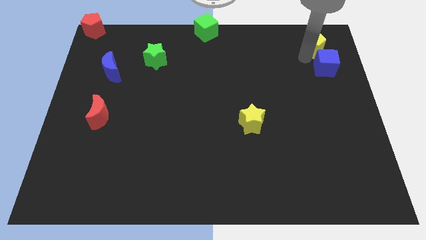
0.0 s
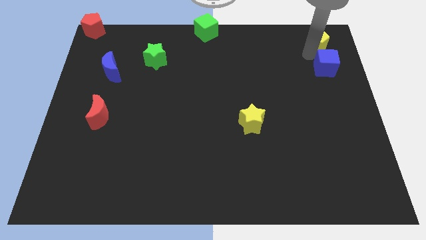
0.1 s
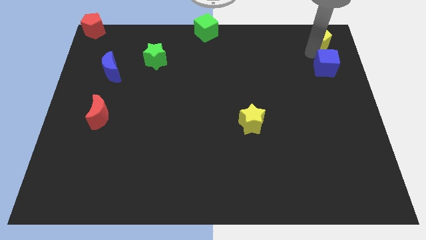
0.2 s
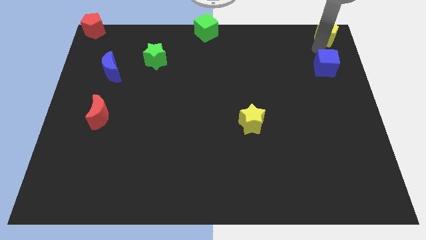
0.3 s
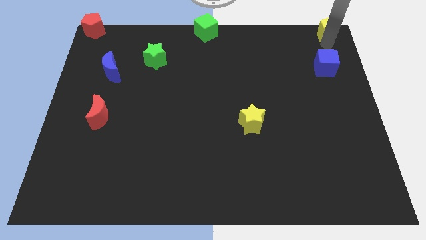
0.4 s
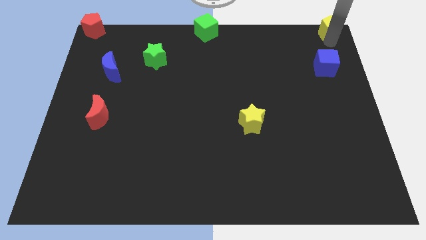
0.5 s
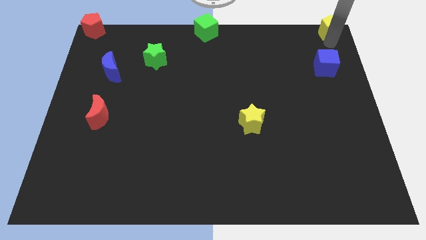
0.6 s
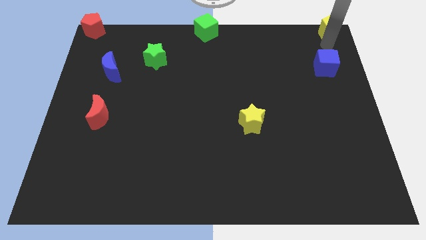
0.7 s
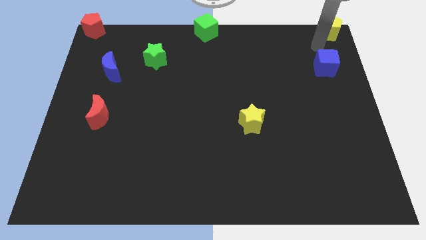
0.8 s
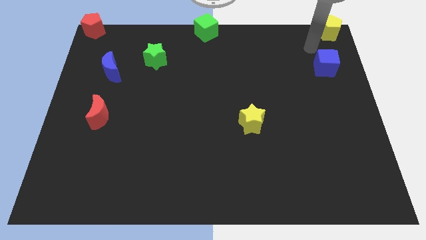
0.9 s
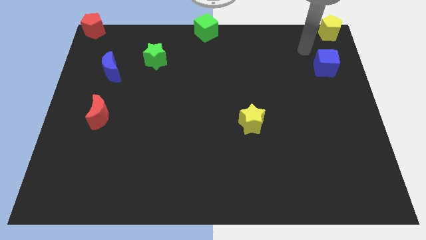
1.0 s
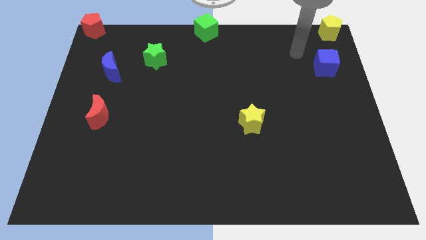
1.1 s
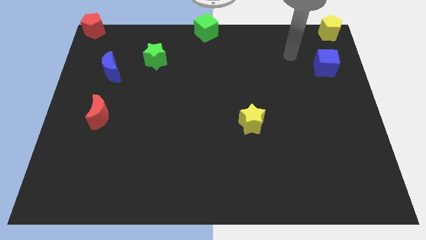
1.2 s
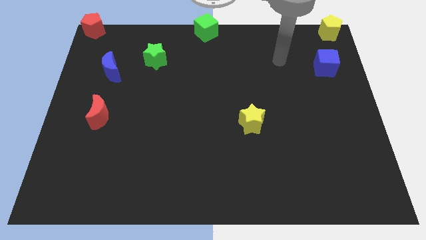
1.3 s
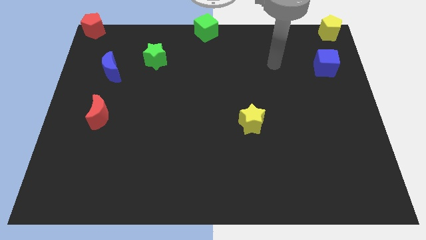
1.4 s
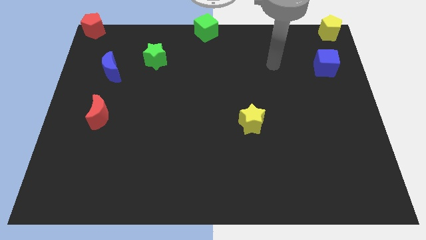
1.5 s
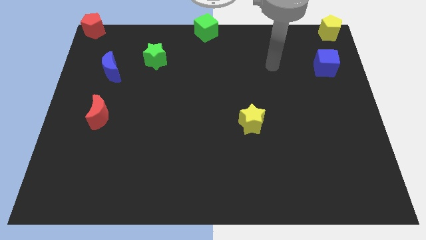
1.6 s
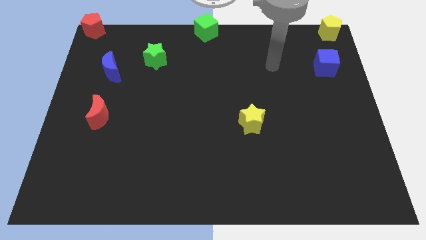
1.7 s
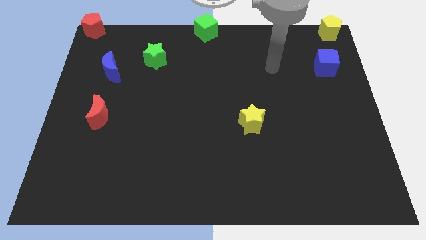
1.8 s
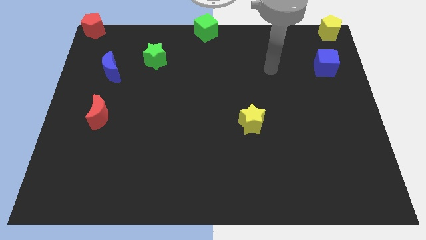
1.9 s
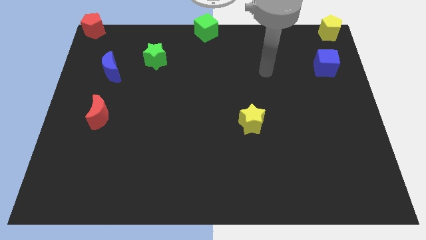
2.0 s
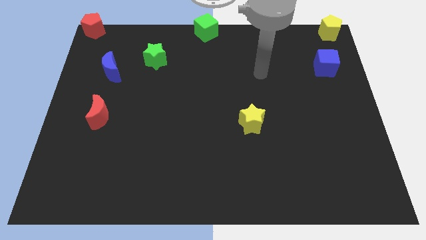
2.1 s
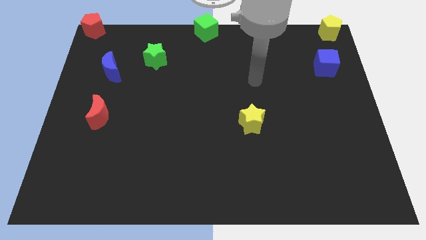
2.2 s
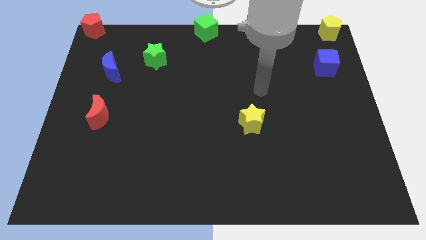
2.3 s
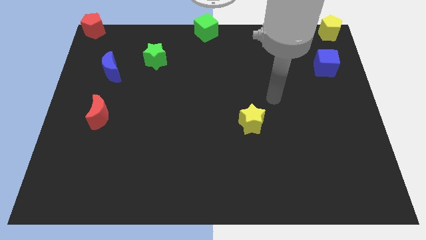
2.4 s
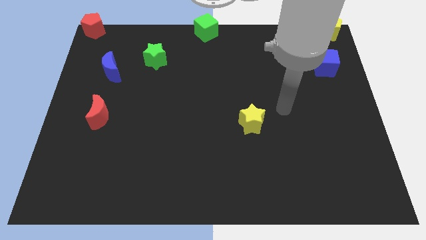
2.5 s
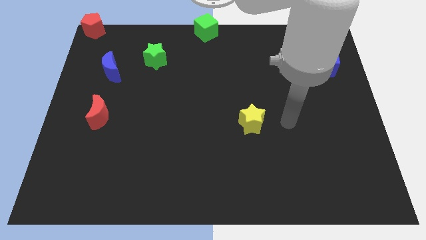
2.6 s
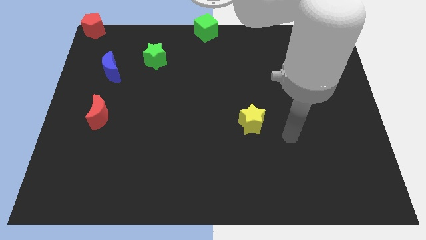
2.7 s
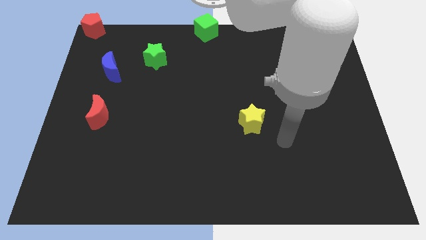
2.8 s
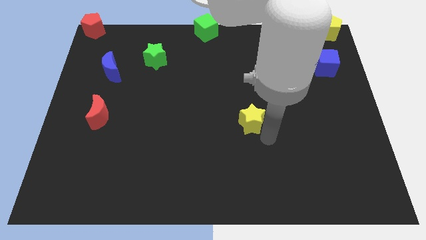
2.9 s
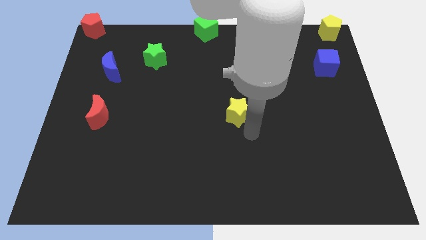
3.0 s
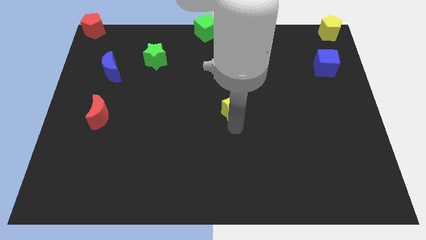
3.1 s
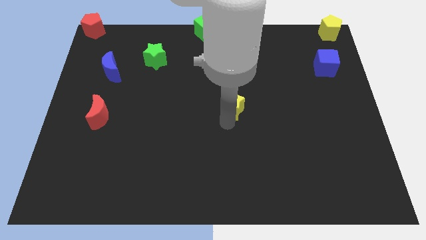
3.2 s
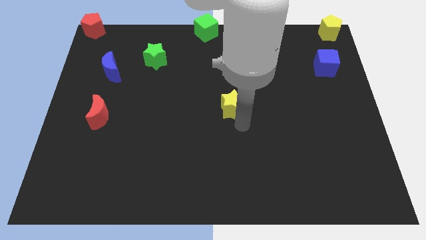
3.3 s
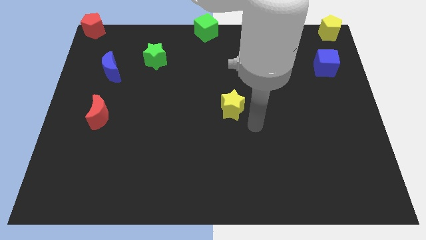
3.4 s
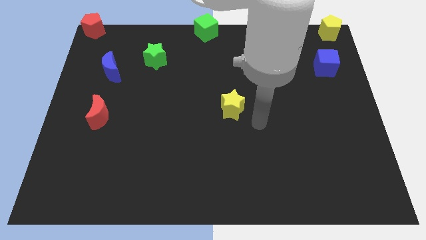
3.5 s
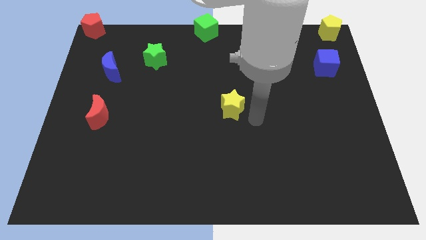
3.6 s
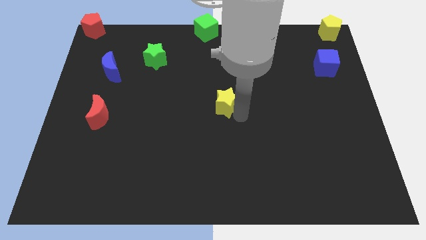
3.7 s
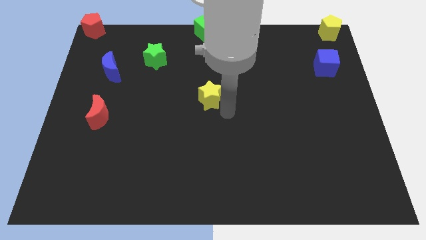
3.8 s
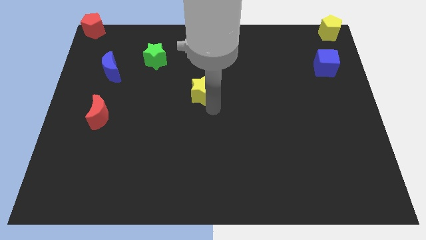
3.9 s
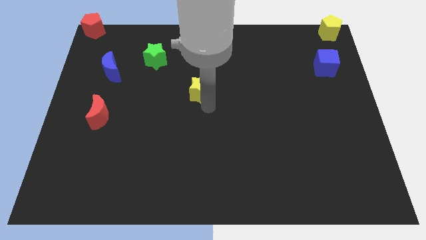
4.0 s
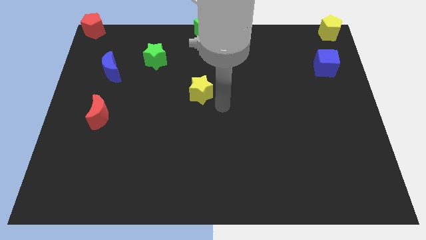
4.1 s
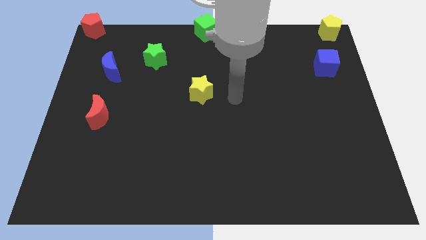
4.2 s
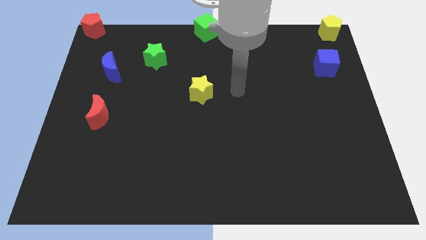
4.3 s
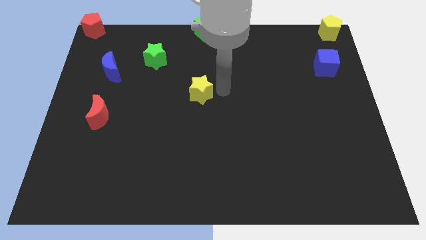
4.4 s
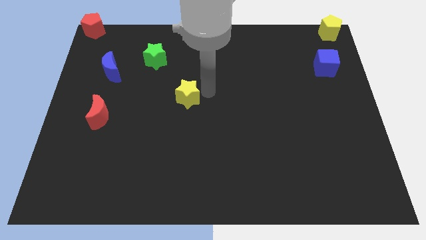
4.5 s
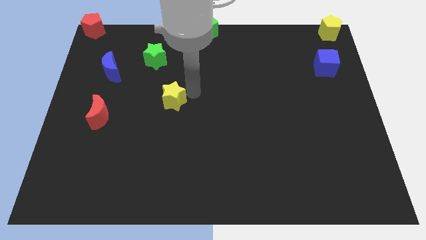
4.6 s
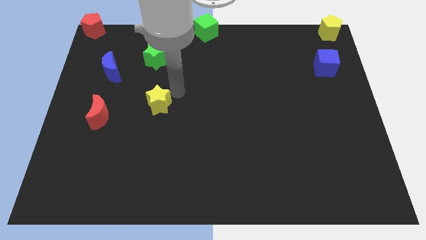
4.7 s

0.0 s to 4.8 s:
place the yellow star below the green star

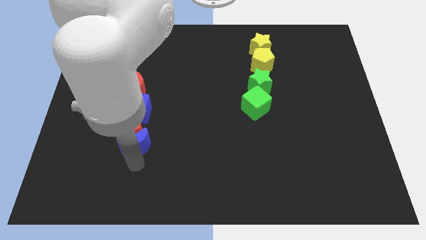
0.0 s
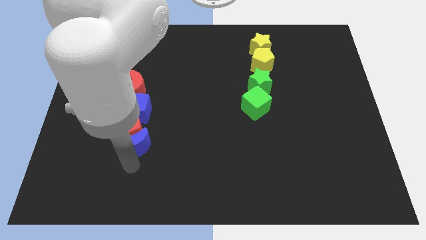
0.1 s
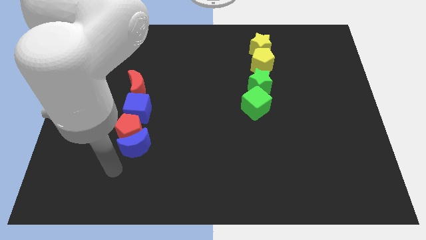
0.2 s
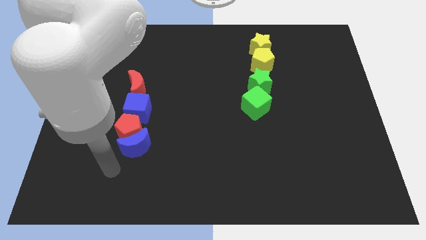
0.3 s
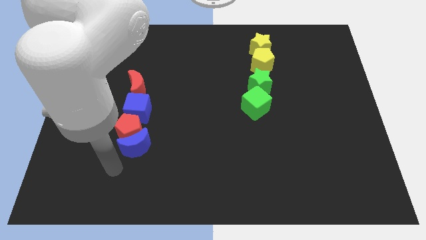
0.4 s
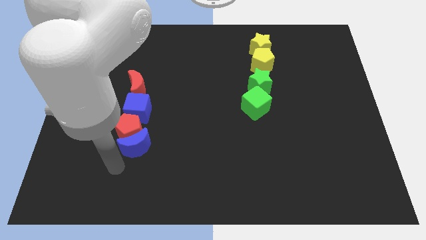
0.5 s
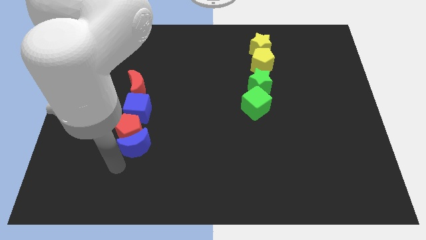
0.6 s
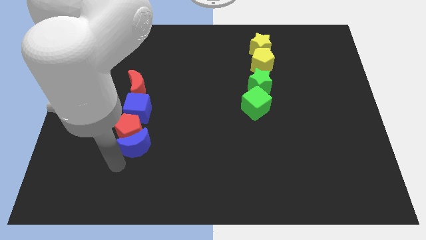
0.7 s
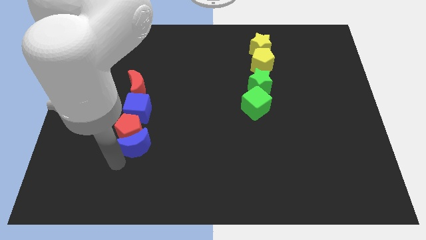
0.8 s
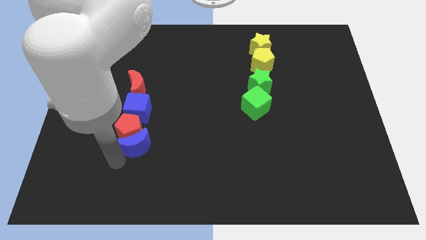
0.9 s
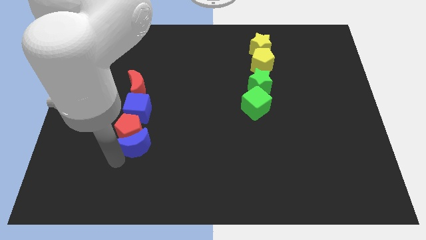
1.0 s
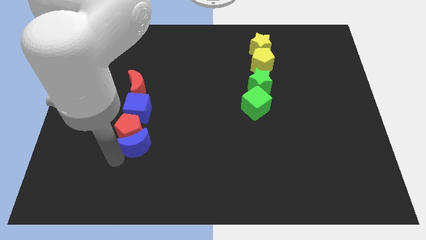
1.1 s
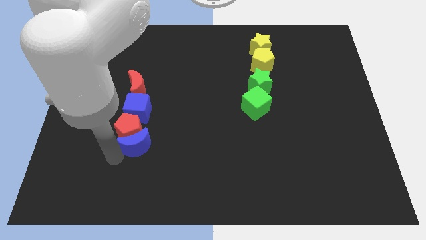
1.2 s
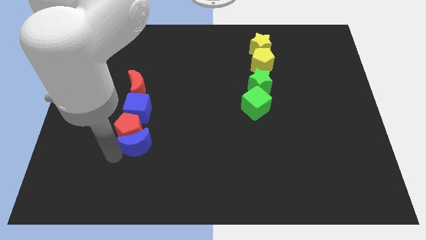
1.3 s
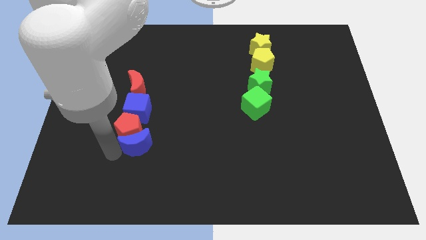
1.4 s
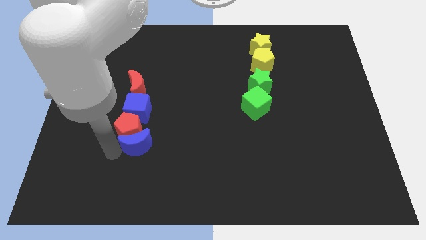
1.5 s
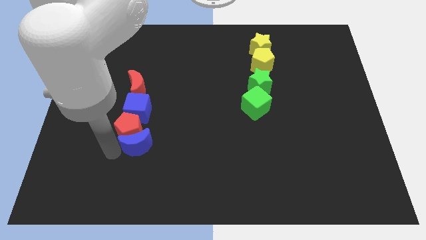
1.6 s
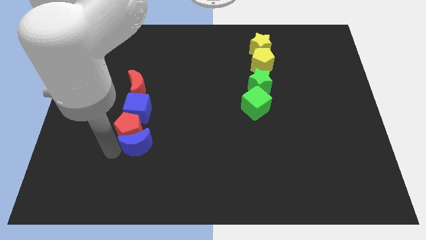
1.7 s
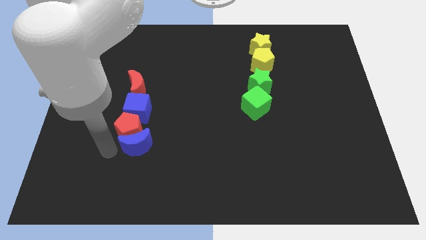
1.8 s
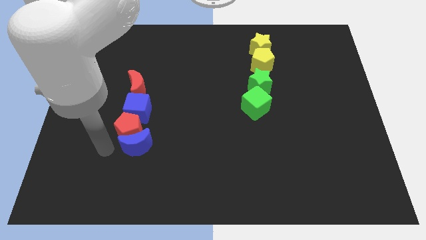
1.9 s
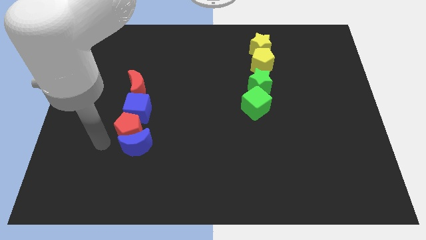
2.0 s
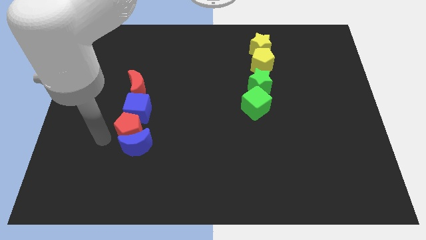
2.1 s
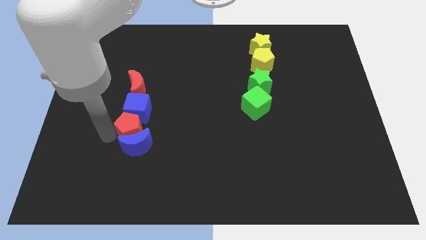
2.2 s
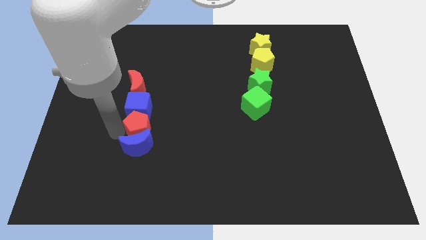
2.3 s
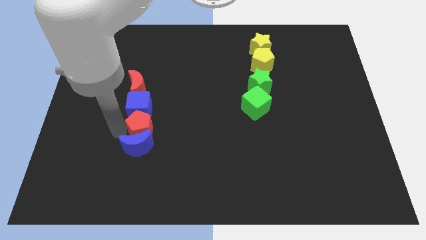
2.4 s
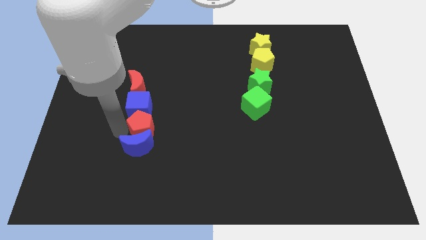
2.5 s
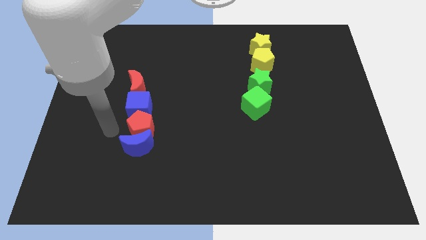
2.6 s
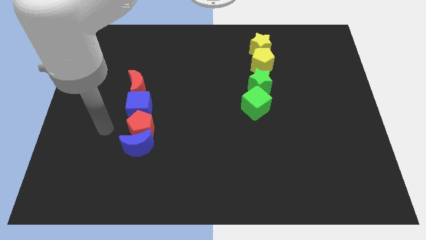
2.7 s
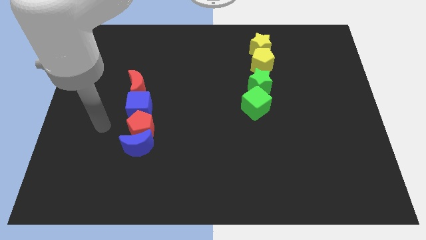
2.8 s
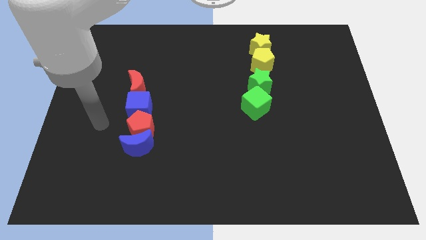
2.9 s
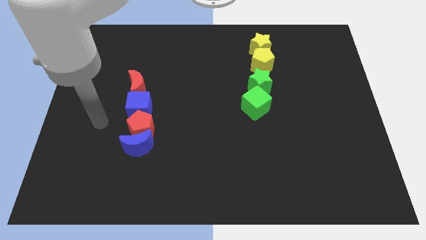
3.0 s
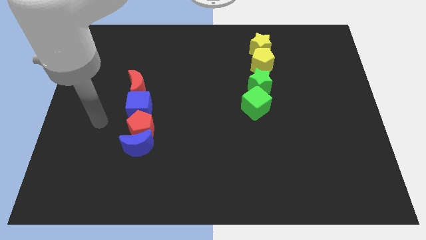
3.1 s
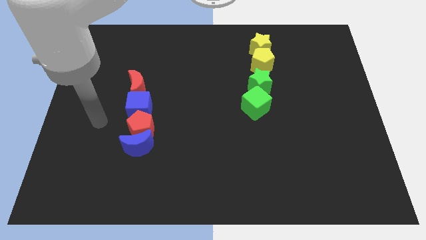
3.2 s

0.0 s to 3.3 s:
adjust the red pentagon in between blue blocks

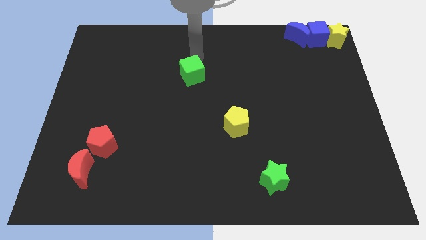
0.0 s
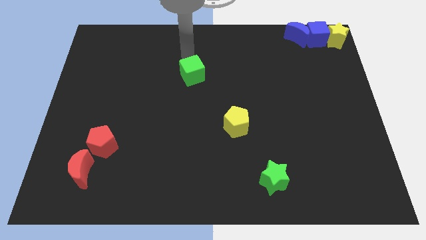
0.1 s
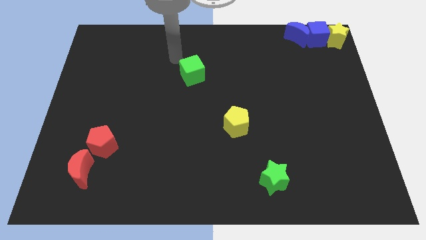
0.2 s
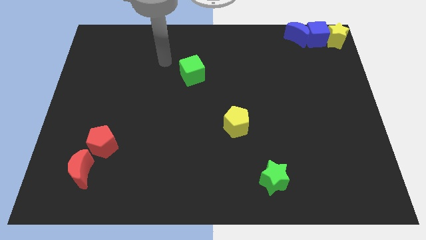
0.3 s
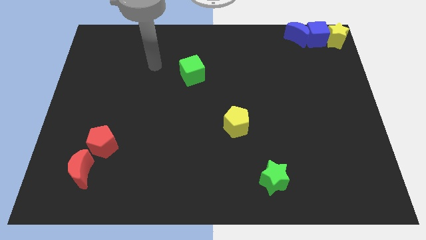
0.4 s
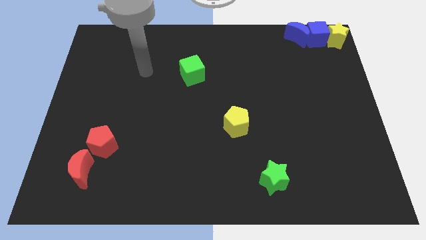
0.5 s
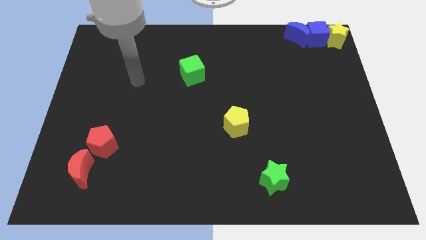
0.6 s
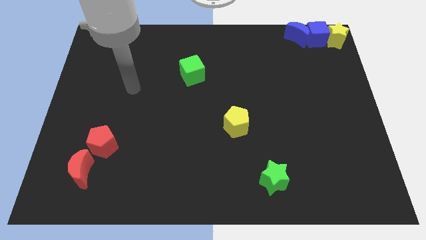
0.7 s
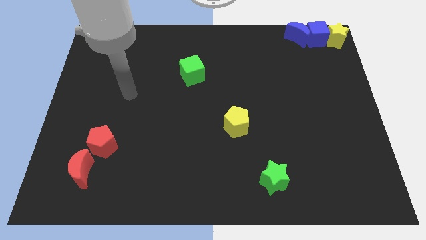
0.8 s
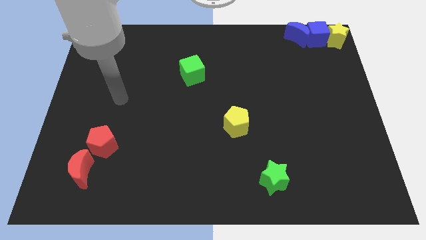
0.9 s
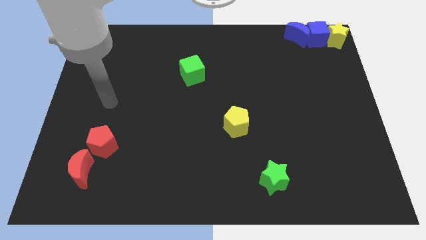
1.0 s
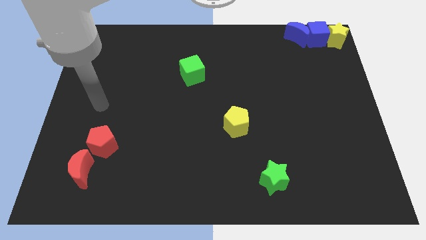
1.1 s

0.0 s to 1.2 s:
move your arm away from the blocks
